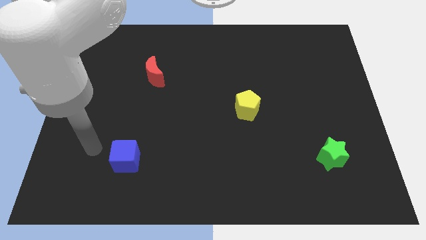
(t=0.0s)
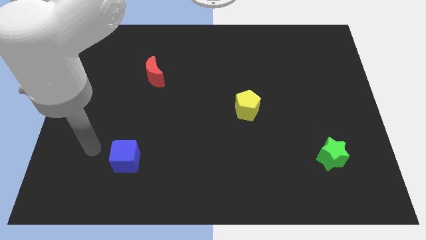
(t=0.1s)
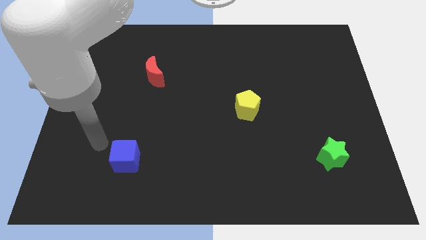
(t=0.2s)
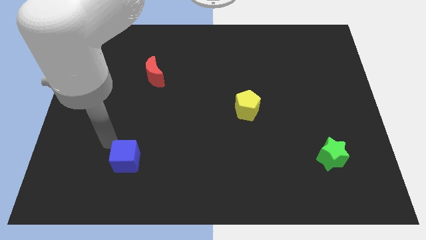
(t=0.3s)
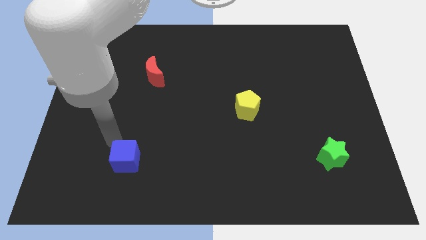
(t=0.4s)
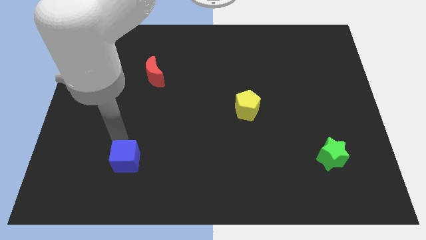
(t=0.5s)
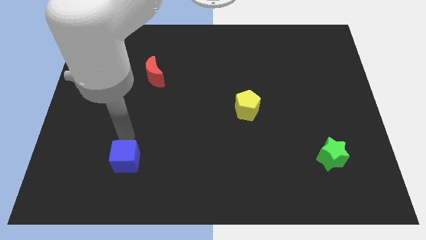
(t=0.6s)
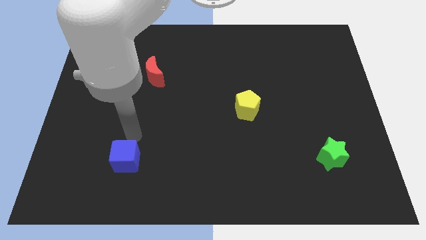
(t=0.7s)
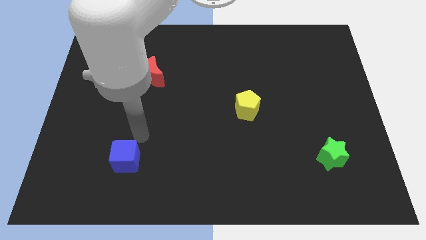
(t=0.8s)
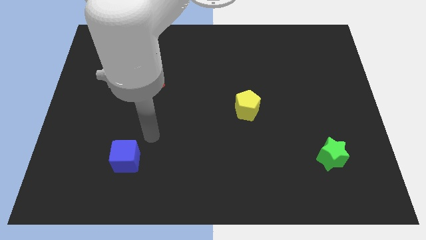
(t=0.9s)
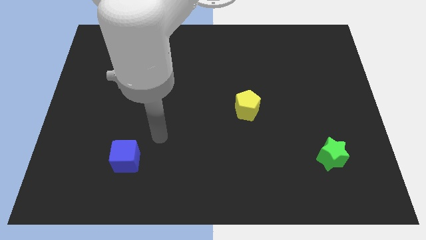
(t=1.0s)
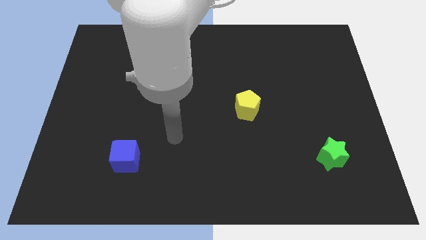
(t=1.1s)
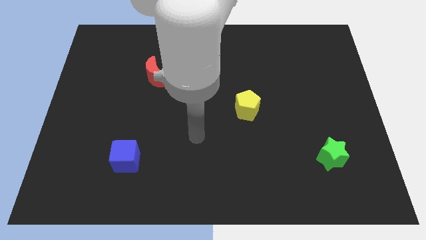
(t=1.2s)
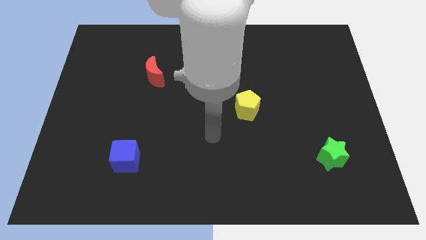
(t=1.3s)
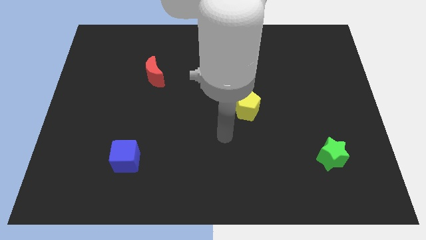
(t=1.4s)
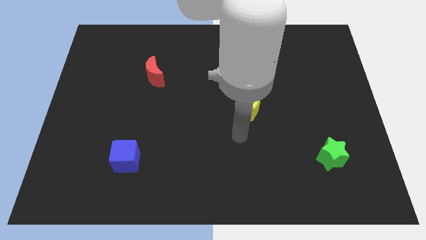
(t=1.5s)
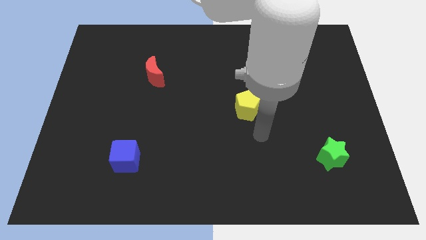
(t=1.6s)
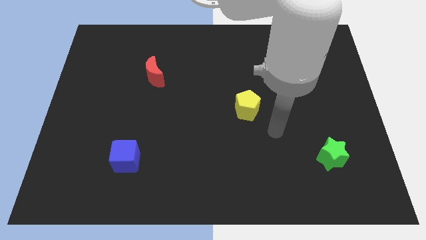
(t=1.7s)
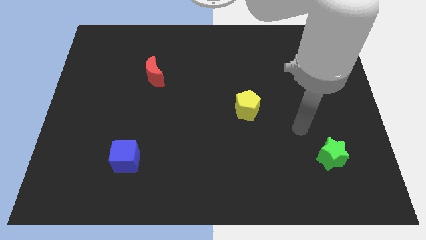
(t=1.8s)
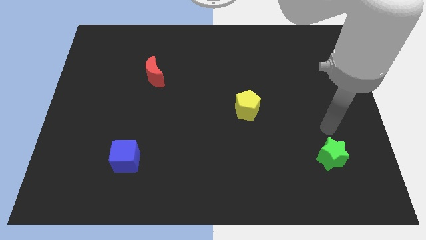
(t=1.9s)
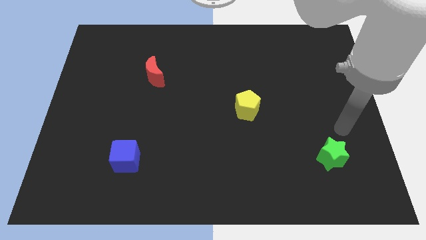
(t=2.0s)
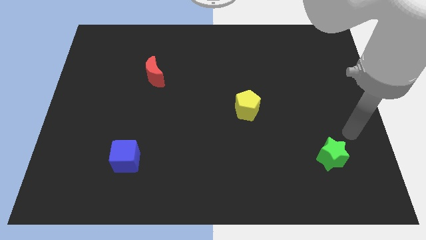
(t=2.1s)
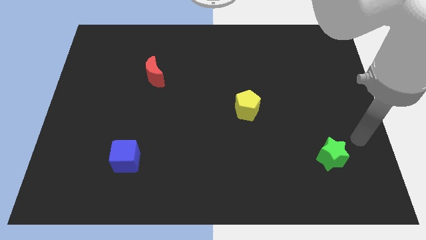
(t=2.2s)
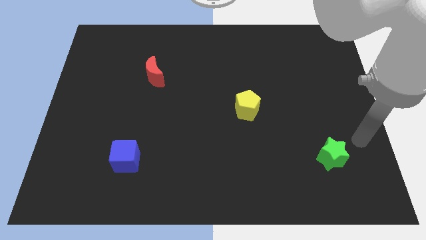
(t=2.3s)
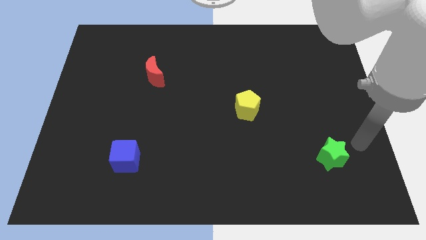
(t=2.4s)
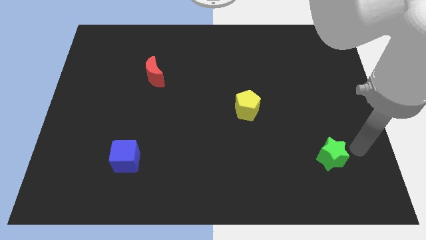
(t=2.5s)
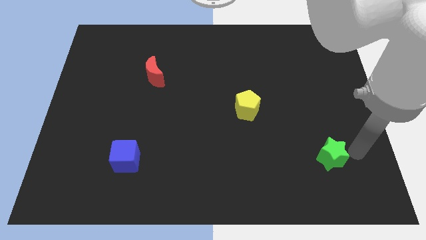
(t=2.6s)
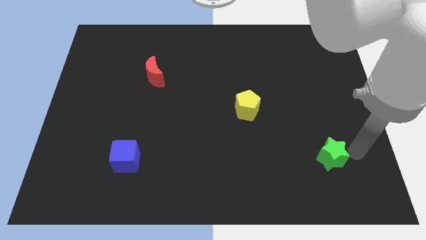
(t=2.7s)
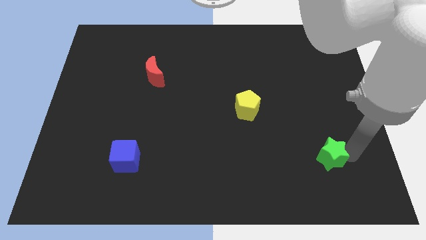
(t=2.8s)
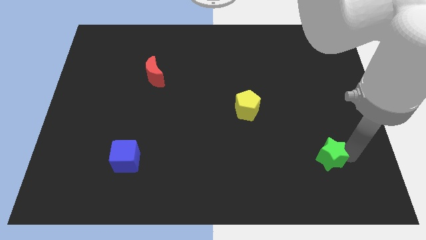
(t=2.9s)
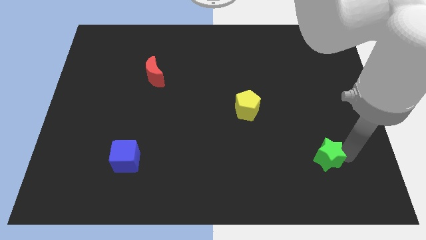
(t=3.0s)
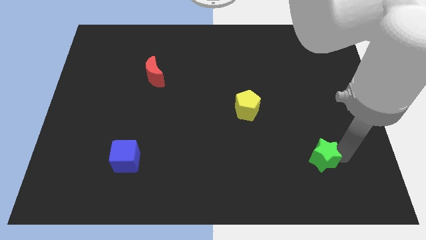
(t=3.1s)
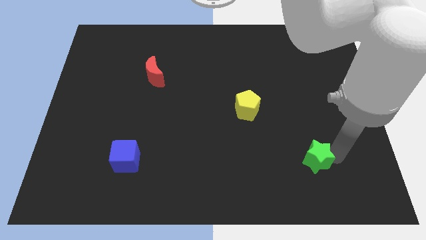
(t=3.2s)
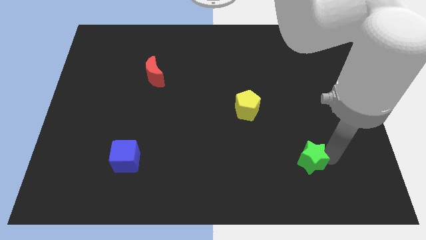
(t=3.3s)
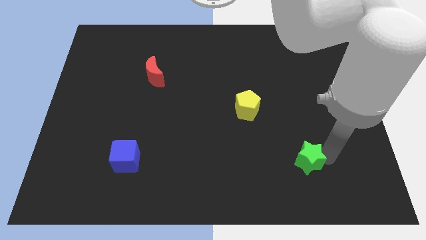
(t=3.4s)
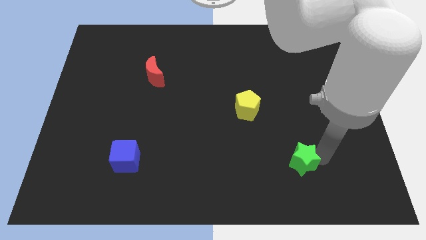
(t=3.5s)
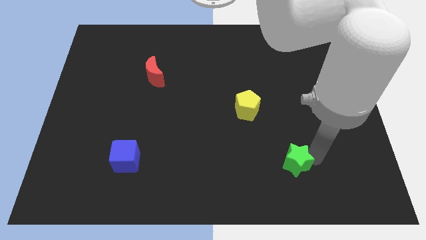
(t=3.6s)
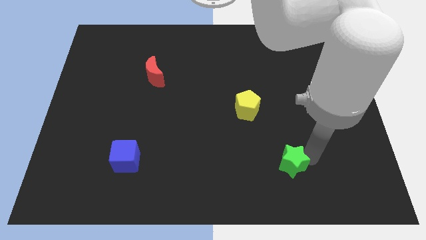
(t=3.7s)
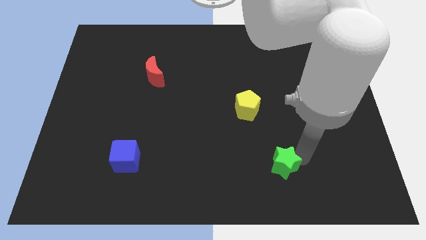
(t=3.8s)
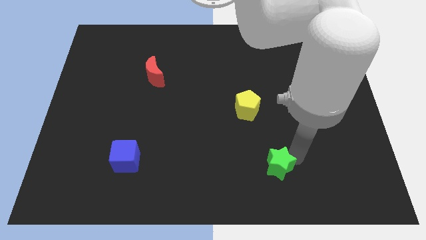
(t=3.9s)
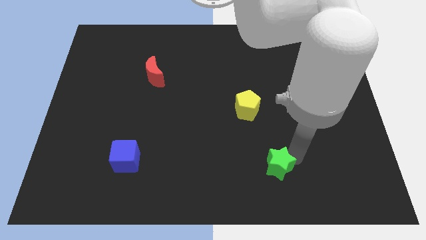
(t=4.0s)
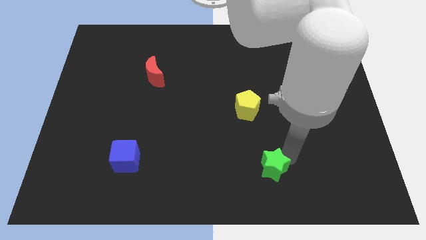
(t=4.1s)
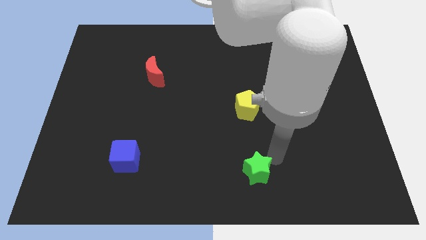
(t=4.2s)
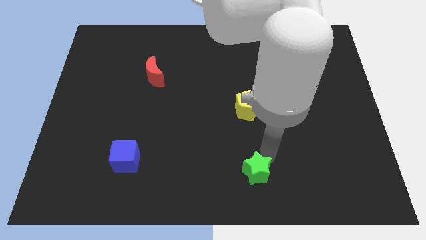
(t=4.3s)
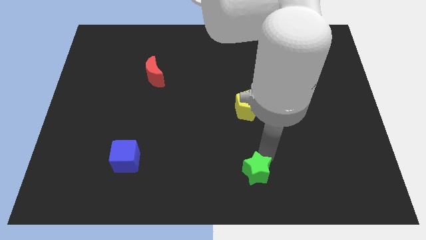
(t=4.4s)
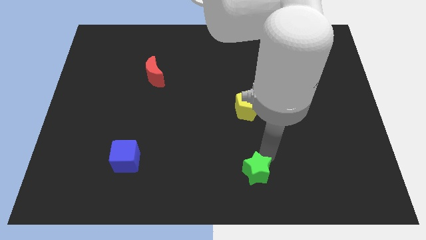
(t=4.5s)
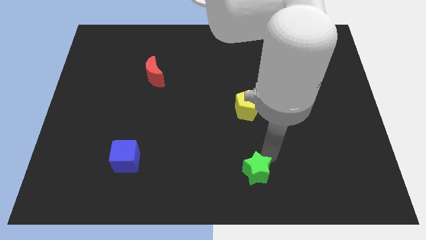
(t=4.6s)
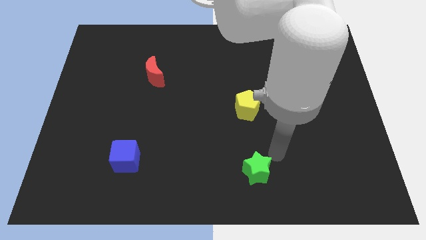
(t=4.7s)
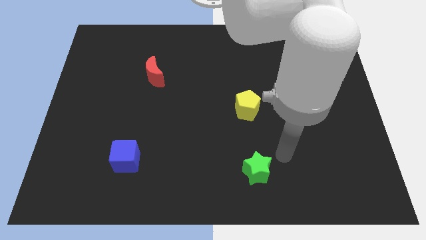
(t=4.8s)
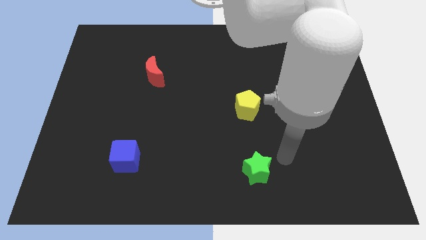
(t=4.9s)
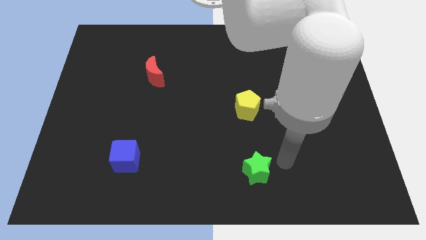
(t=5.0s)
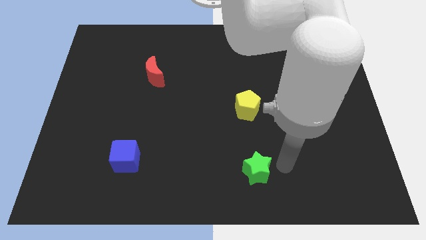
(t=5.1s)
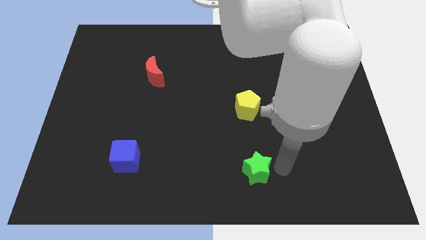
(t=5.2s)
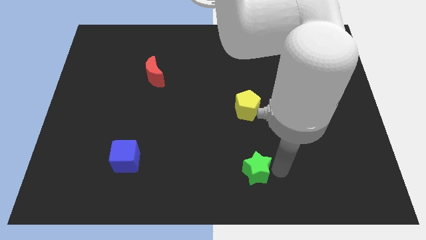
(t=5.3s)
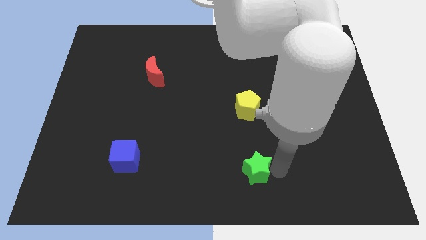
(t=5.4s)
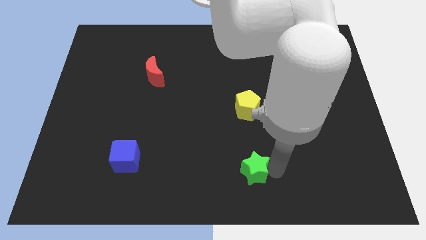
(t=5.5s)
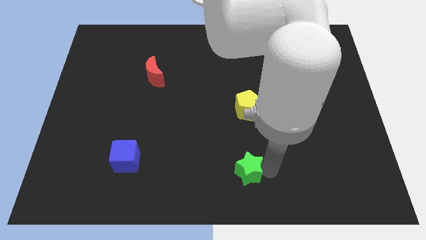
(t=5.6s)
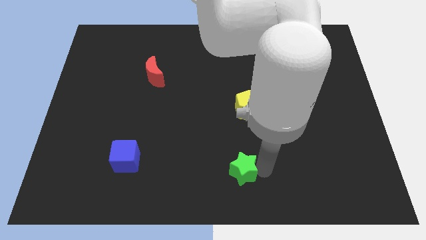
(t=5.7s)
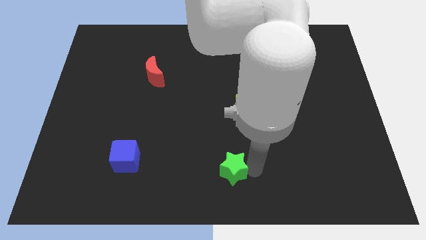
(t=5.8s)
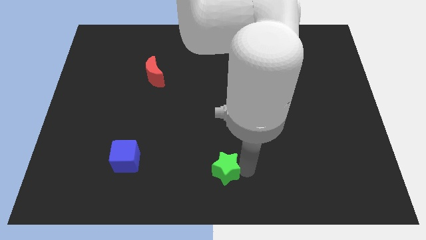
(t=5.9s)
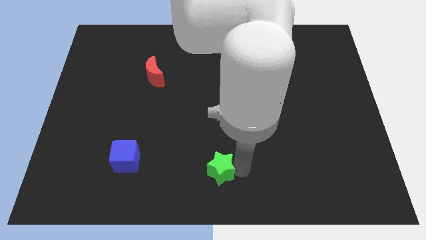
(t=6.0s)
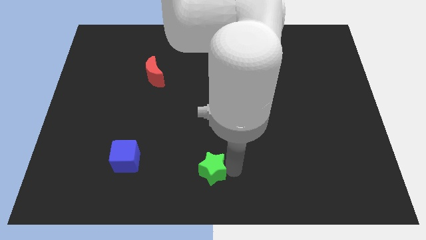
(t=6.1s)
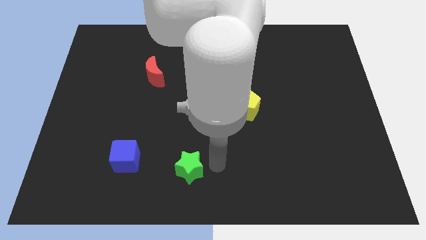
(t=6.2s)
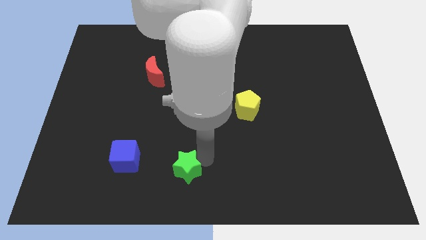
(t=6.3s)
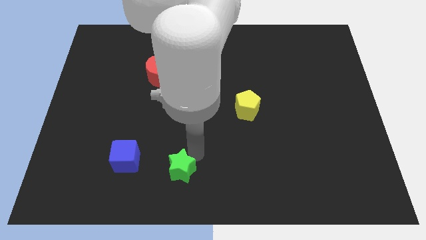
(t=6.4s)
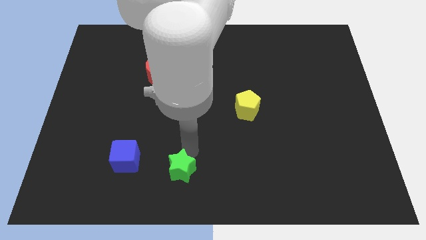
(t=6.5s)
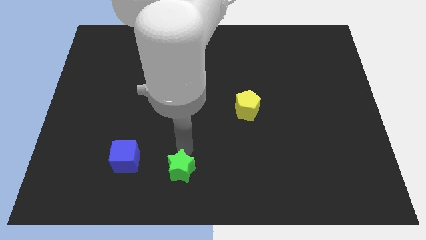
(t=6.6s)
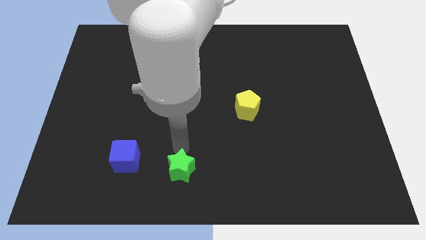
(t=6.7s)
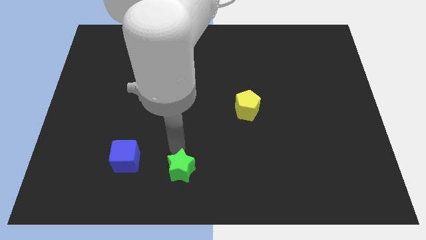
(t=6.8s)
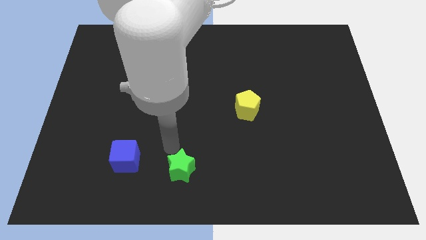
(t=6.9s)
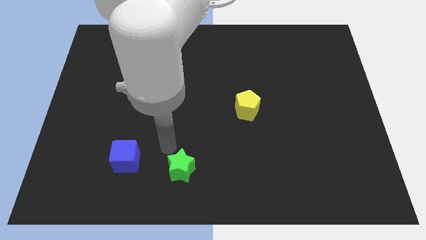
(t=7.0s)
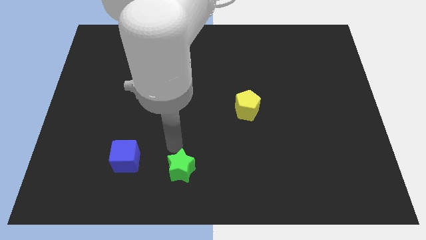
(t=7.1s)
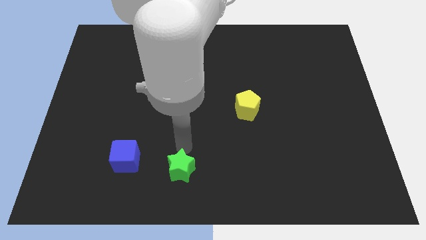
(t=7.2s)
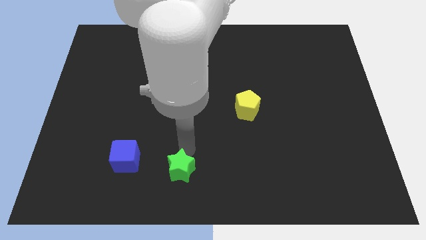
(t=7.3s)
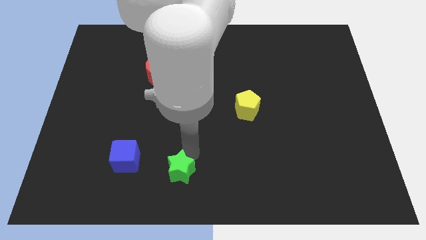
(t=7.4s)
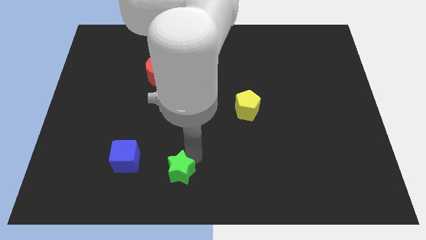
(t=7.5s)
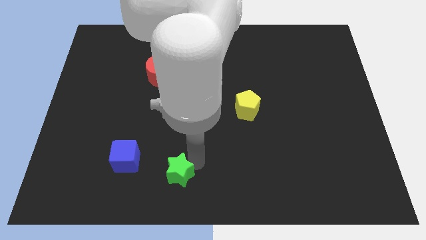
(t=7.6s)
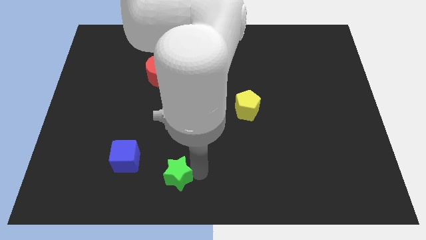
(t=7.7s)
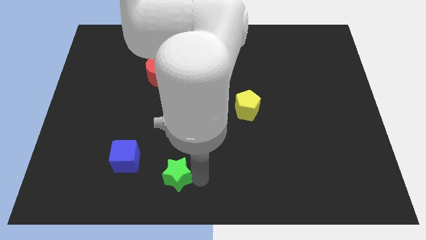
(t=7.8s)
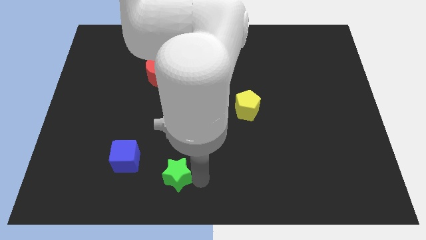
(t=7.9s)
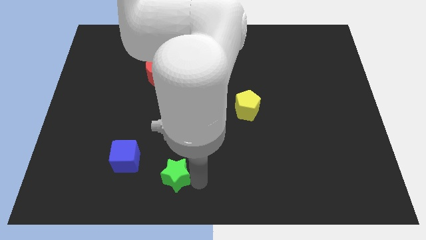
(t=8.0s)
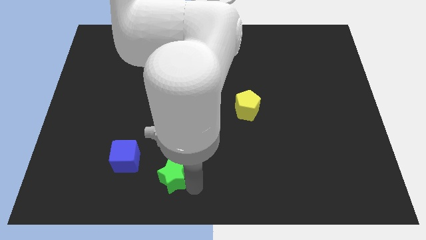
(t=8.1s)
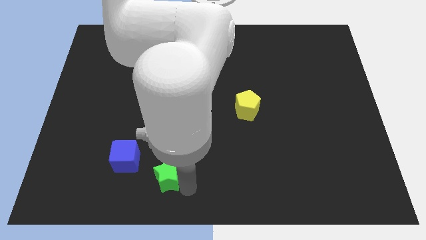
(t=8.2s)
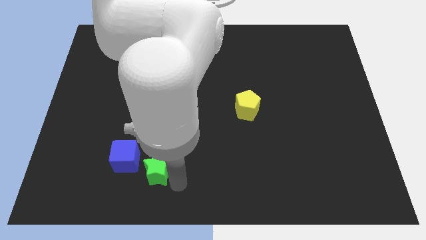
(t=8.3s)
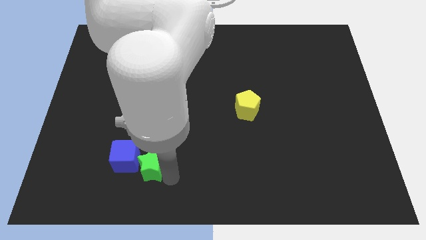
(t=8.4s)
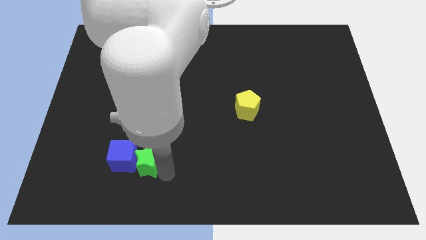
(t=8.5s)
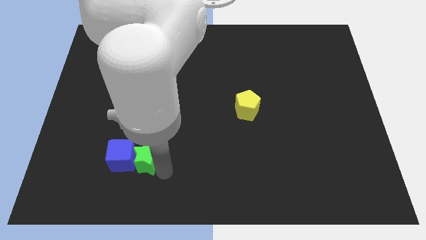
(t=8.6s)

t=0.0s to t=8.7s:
move the star to the cube
